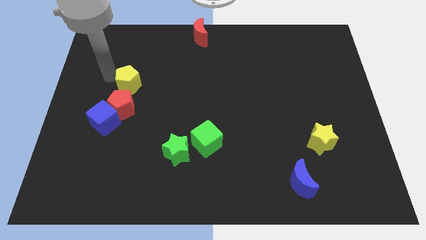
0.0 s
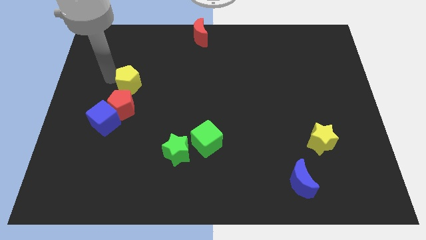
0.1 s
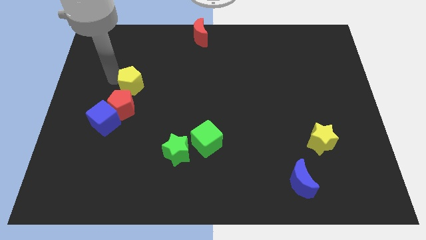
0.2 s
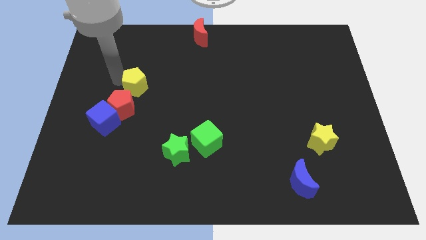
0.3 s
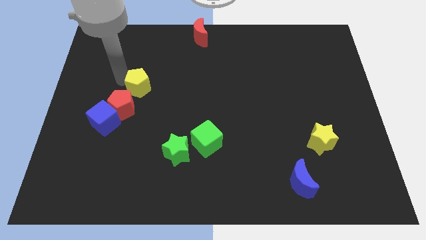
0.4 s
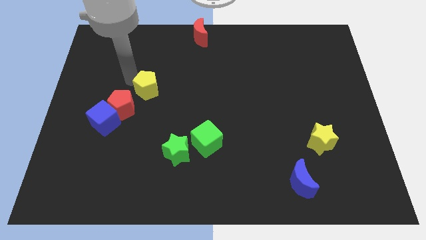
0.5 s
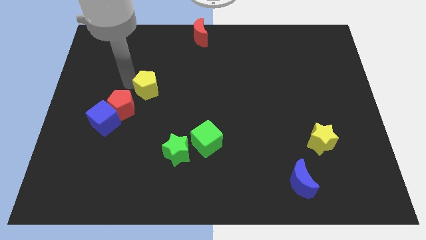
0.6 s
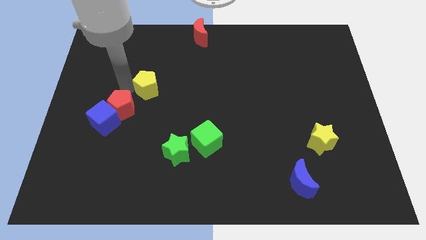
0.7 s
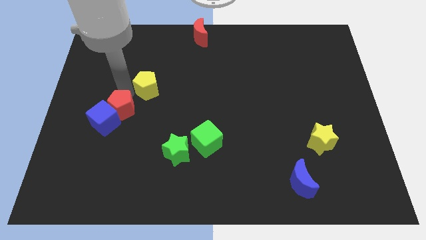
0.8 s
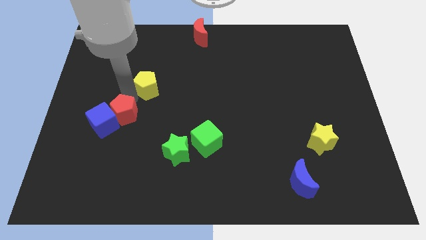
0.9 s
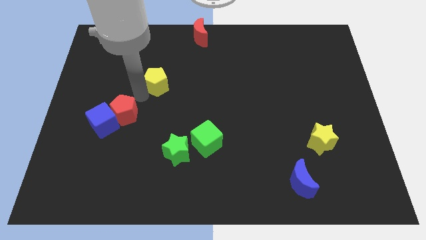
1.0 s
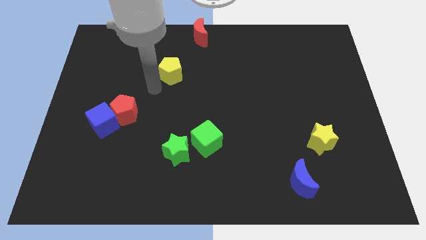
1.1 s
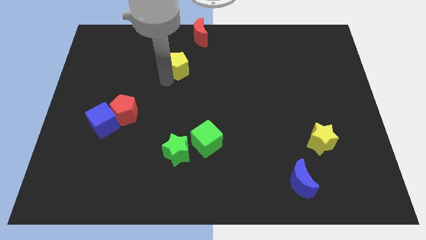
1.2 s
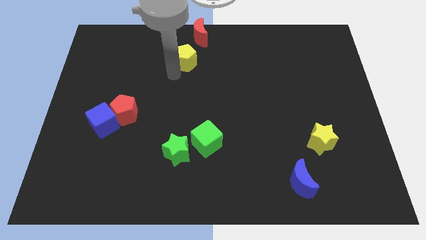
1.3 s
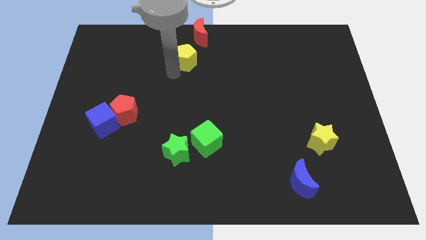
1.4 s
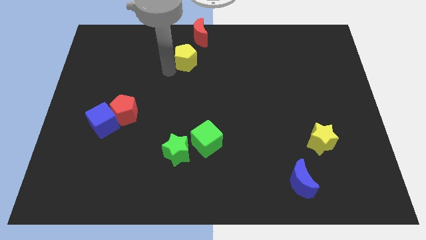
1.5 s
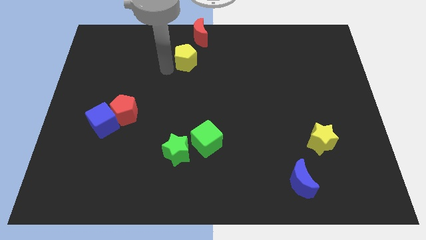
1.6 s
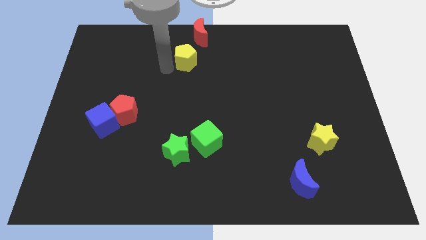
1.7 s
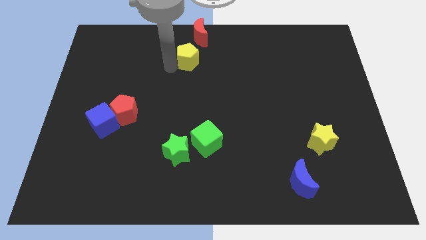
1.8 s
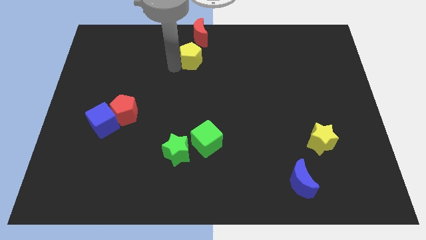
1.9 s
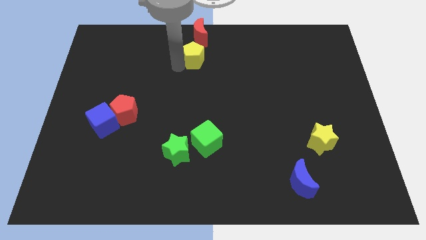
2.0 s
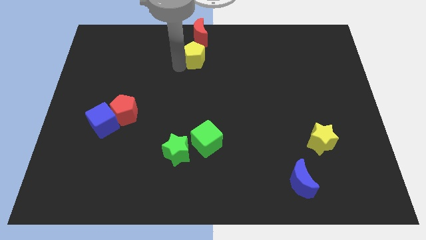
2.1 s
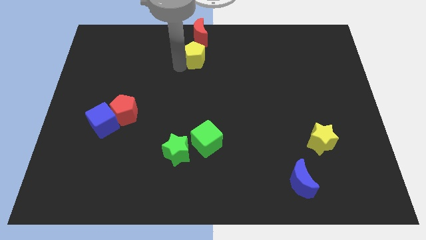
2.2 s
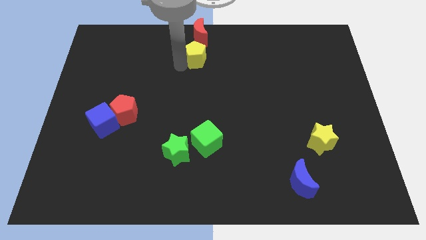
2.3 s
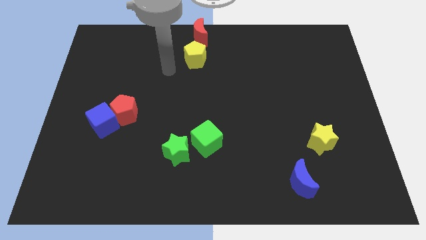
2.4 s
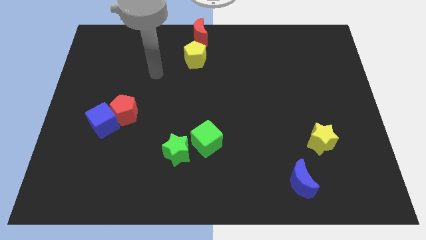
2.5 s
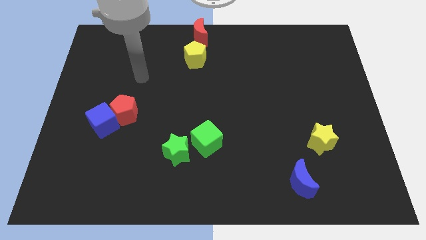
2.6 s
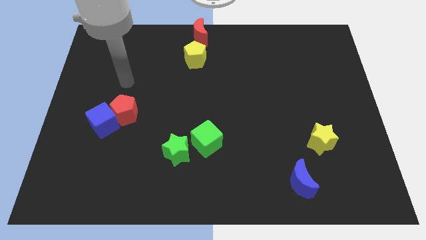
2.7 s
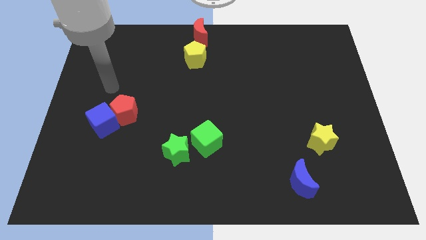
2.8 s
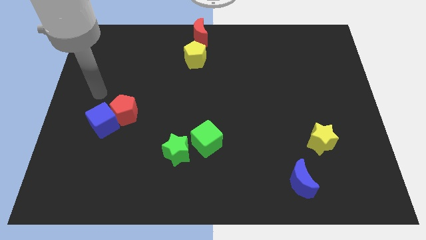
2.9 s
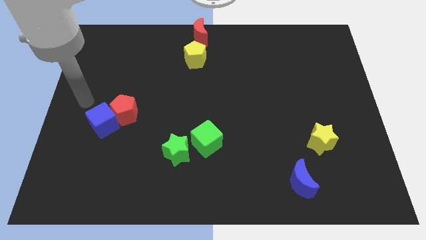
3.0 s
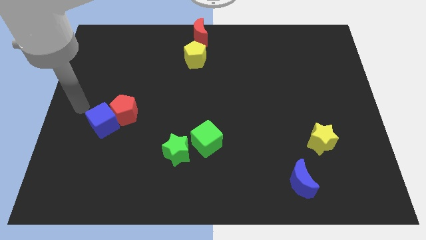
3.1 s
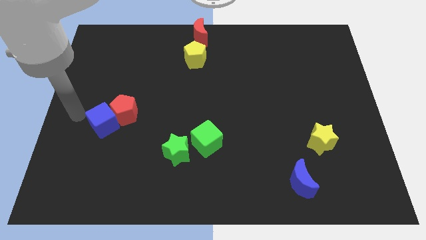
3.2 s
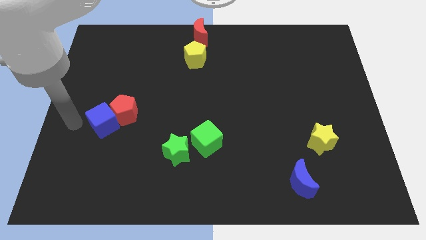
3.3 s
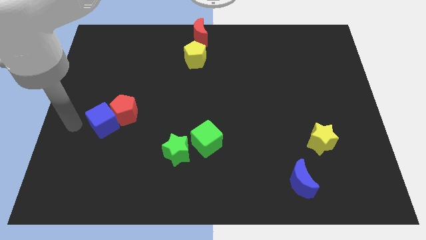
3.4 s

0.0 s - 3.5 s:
move the yellow pentagon below the red crescent

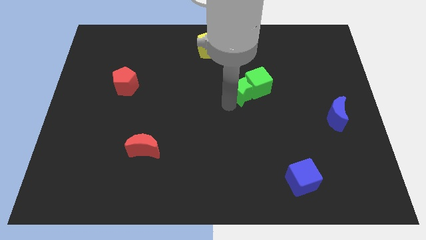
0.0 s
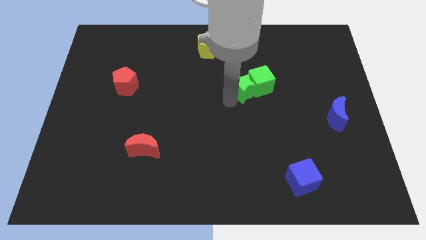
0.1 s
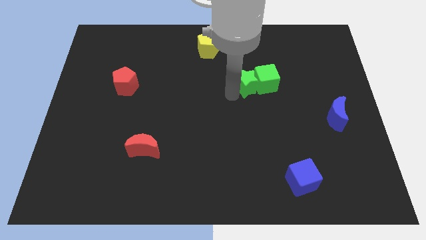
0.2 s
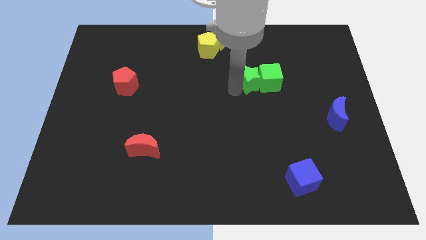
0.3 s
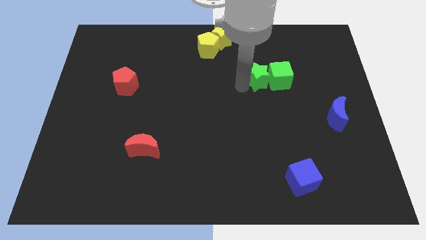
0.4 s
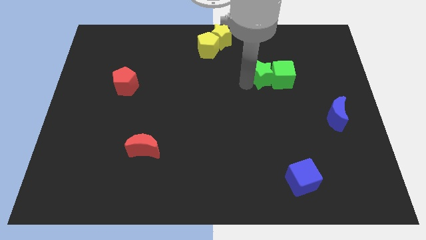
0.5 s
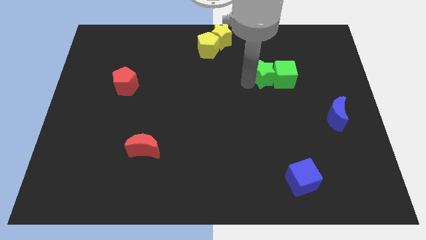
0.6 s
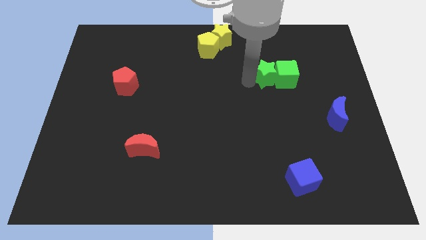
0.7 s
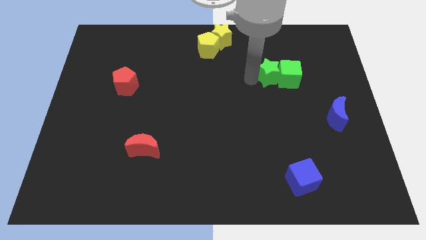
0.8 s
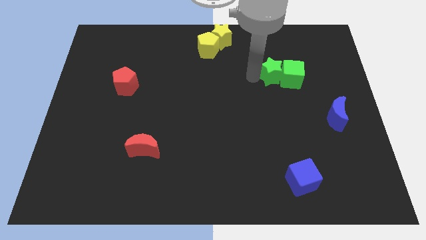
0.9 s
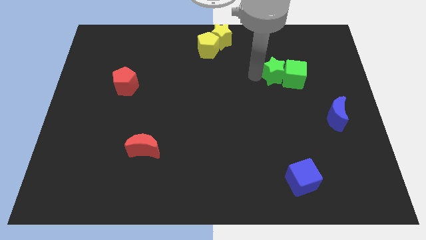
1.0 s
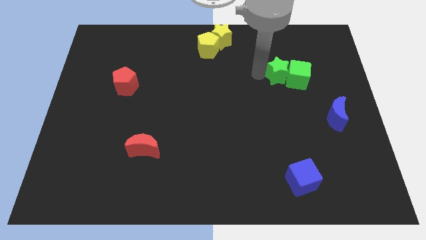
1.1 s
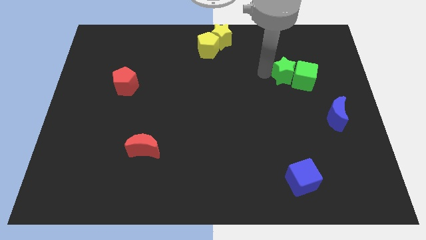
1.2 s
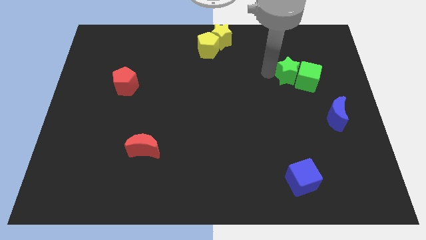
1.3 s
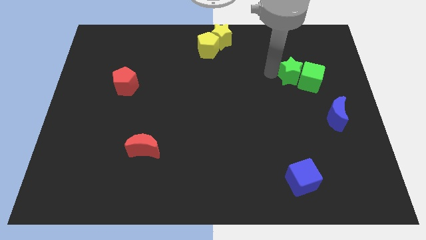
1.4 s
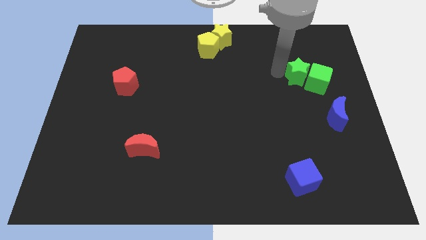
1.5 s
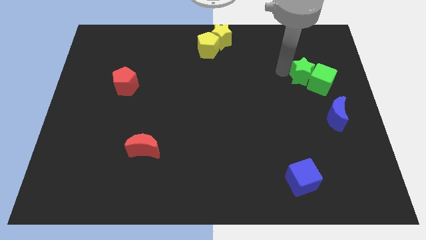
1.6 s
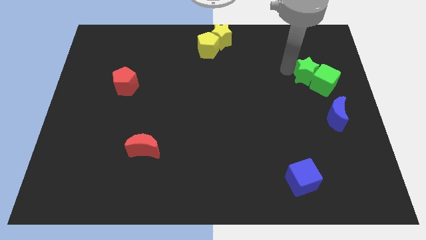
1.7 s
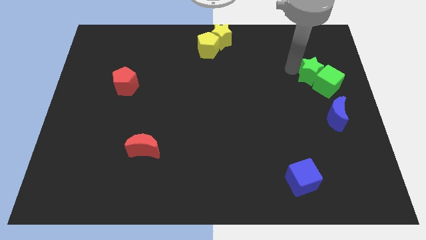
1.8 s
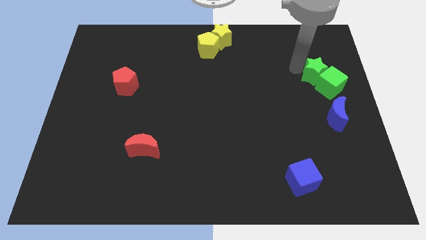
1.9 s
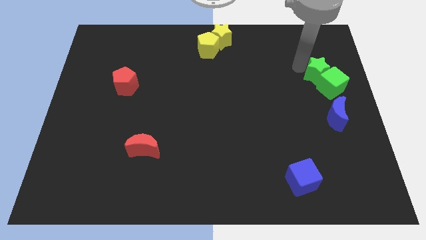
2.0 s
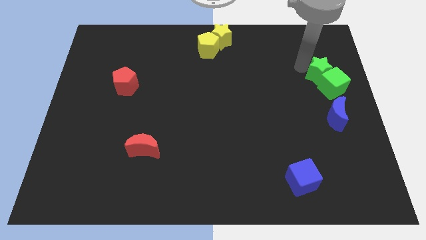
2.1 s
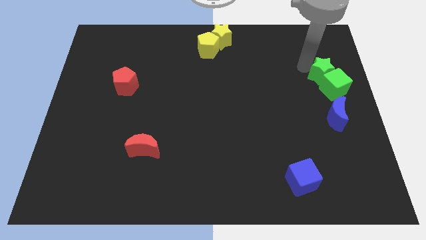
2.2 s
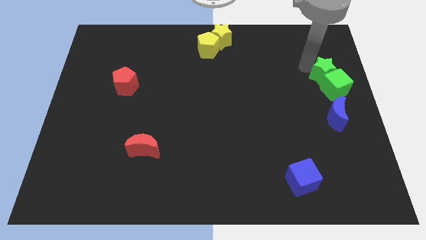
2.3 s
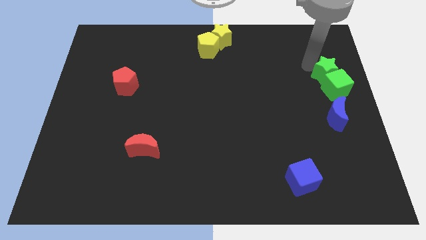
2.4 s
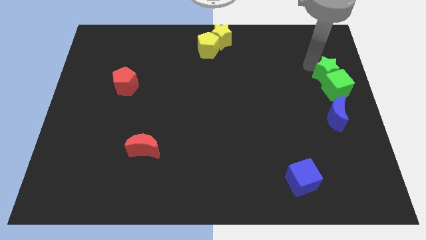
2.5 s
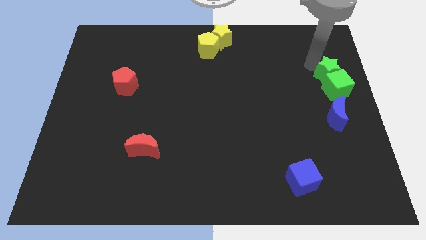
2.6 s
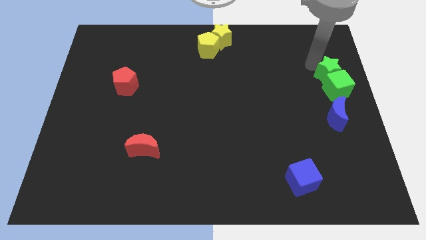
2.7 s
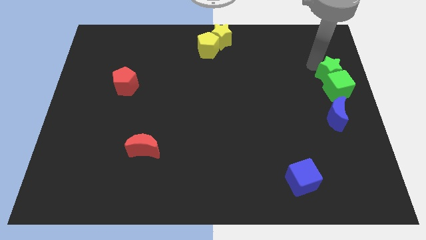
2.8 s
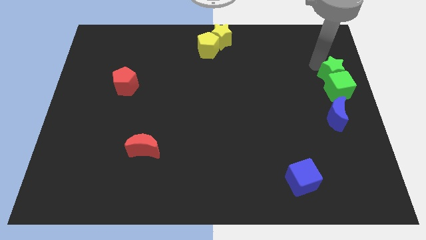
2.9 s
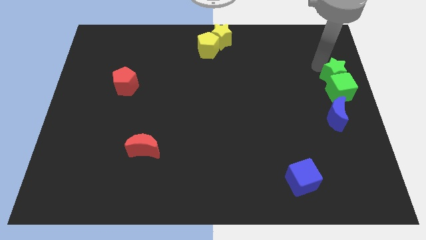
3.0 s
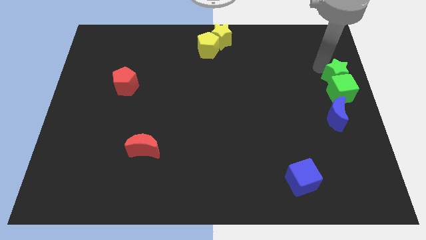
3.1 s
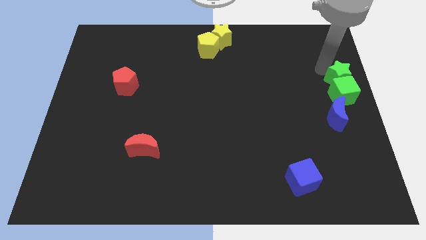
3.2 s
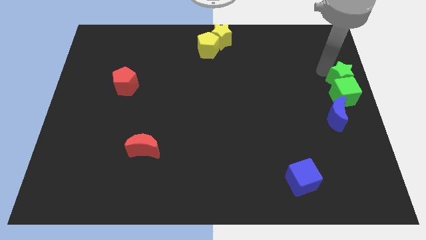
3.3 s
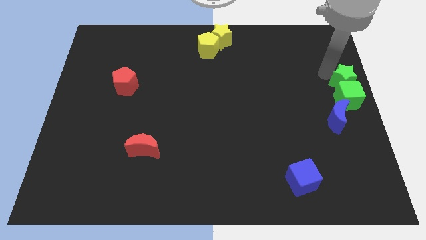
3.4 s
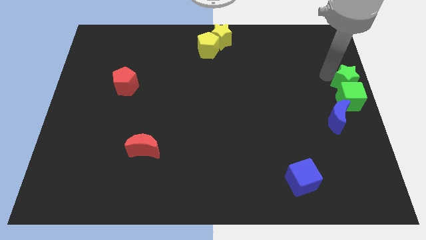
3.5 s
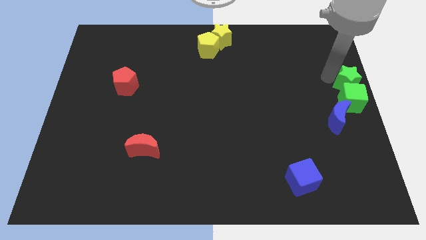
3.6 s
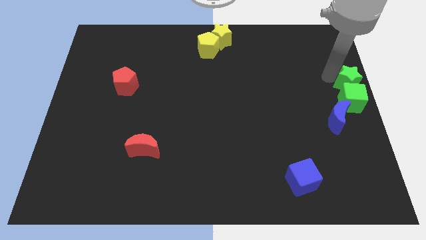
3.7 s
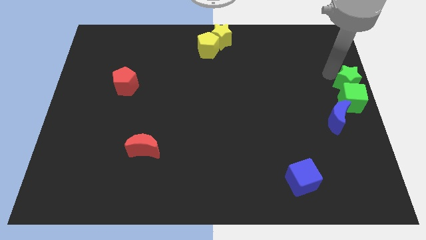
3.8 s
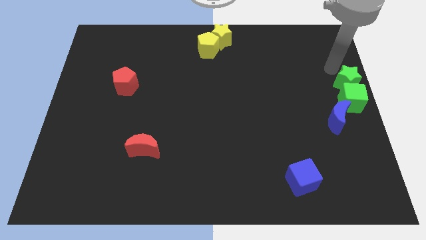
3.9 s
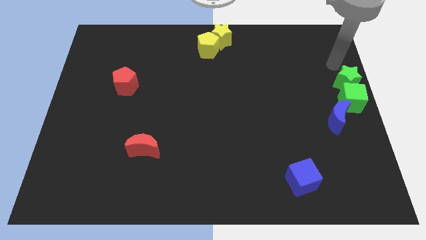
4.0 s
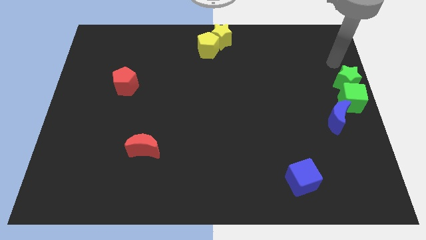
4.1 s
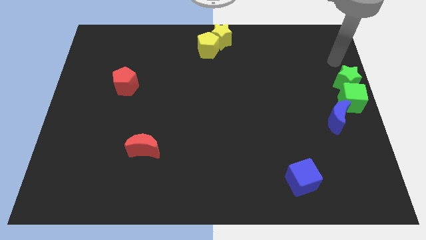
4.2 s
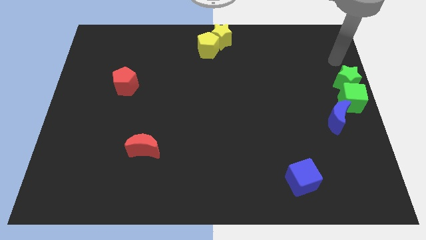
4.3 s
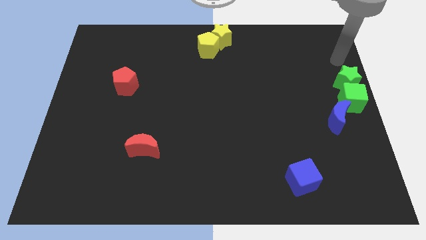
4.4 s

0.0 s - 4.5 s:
move the green blocks to the center right of the board

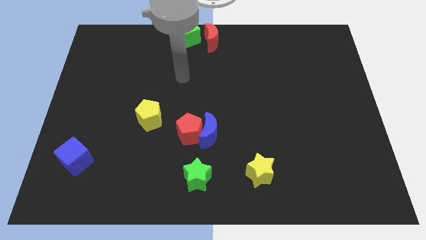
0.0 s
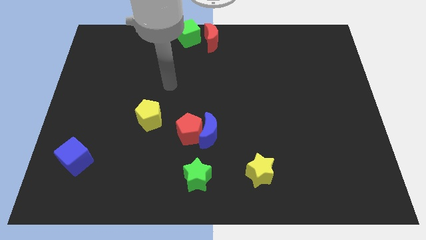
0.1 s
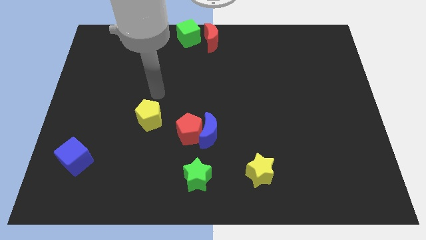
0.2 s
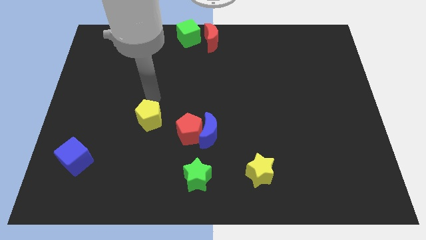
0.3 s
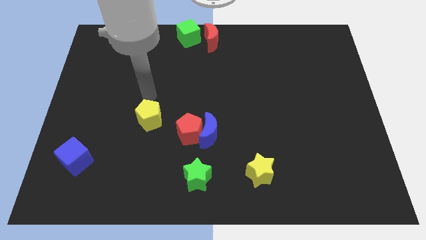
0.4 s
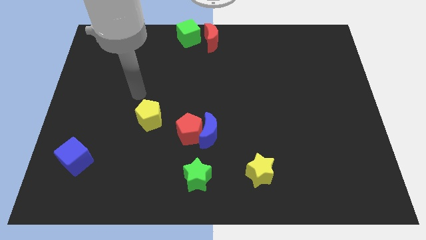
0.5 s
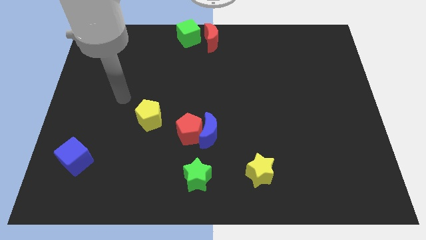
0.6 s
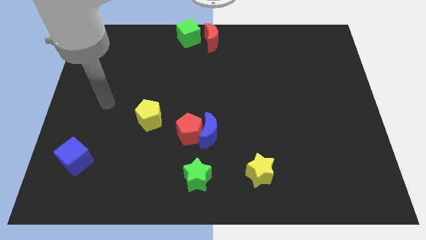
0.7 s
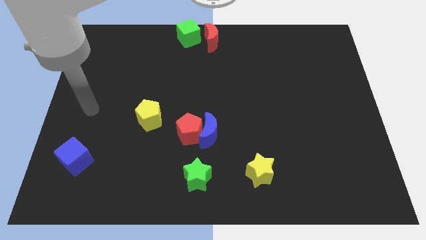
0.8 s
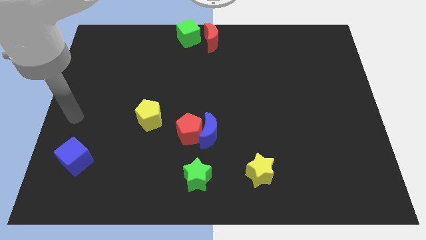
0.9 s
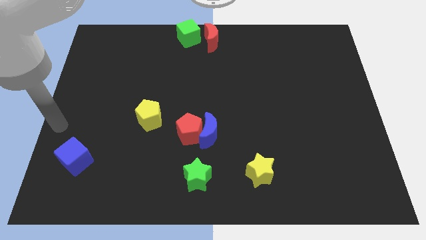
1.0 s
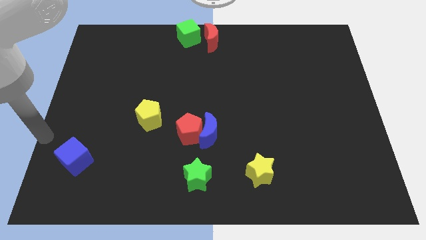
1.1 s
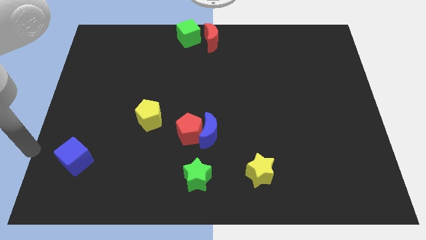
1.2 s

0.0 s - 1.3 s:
move your hand to the left side of the blue cube
